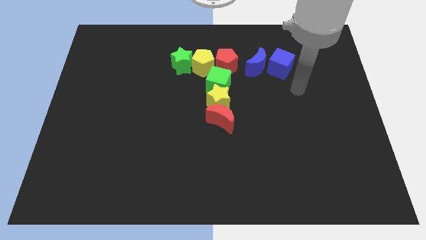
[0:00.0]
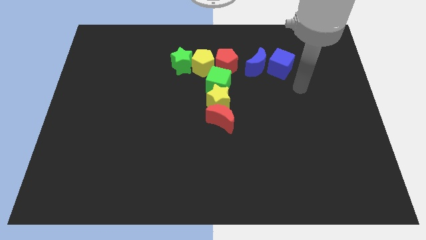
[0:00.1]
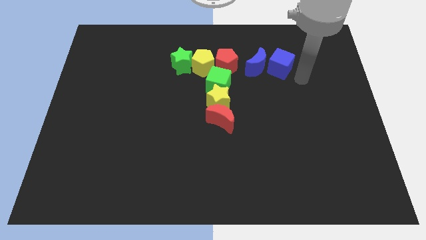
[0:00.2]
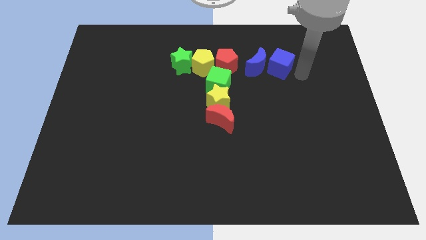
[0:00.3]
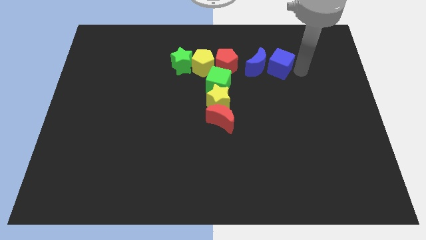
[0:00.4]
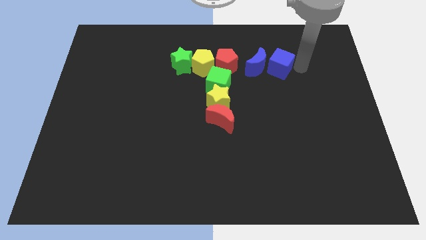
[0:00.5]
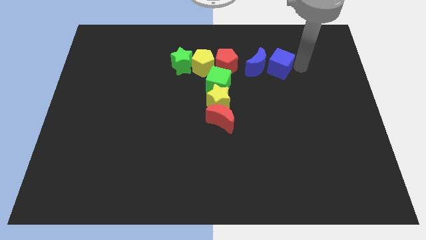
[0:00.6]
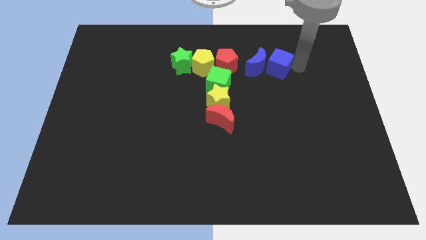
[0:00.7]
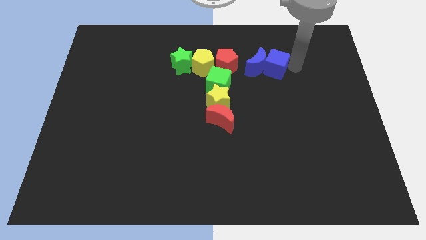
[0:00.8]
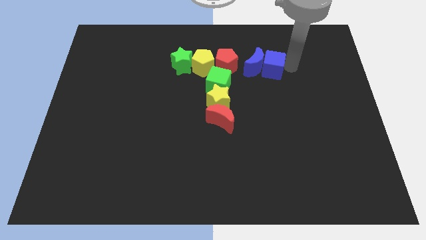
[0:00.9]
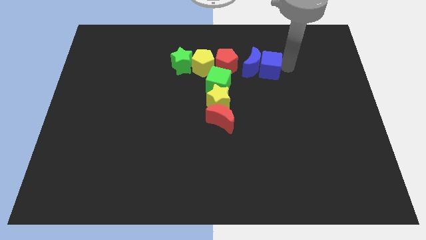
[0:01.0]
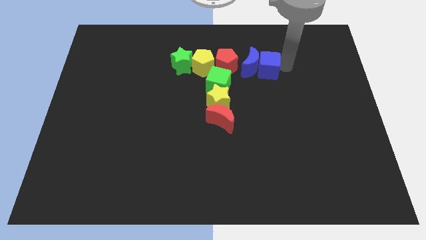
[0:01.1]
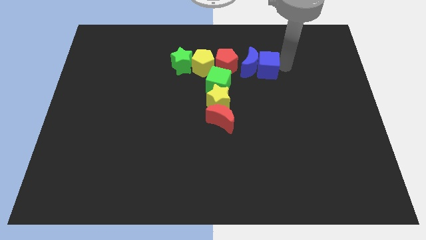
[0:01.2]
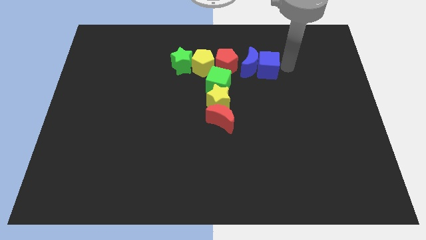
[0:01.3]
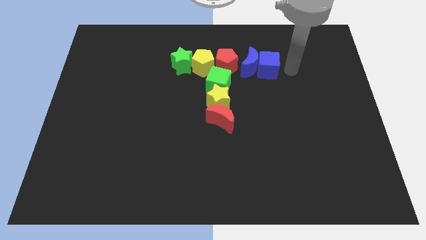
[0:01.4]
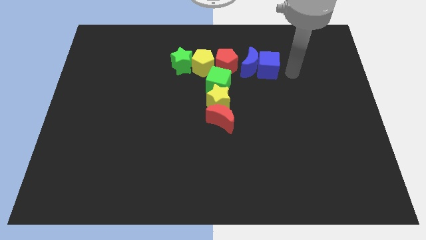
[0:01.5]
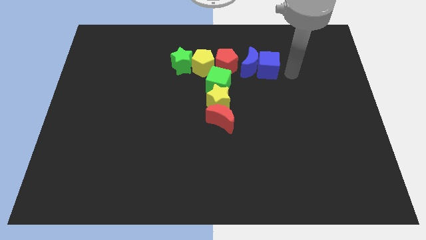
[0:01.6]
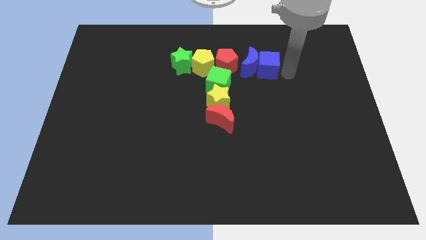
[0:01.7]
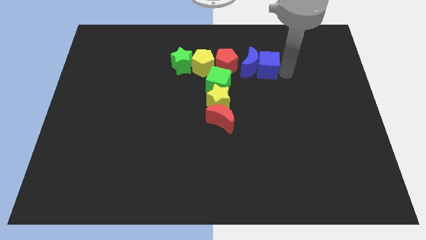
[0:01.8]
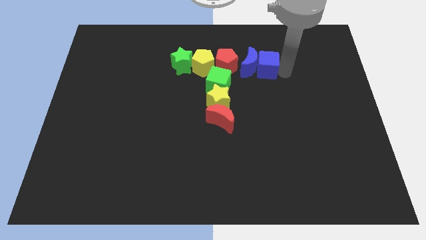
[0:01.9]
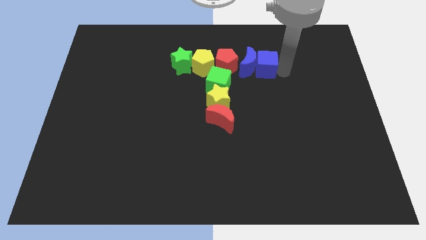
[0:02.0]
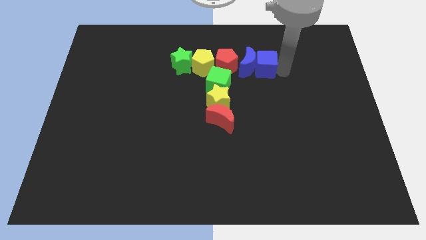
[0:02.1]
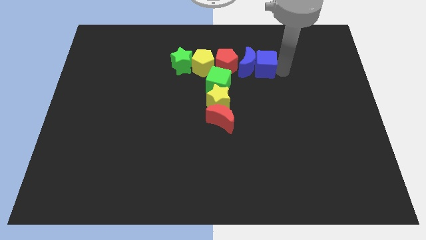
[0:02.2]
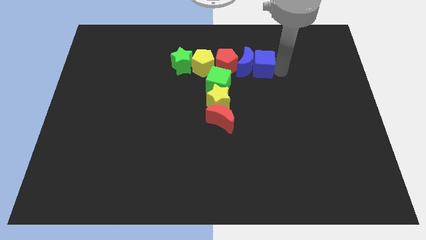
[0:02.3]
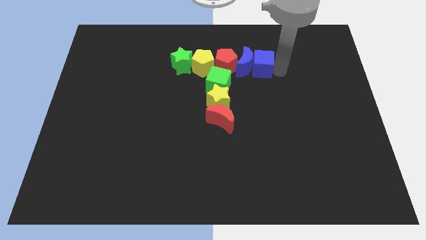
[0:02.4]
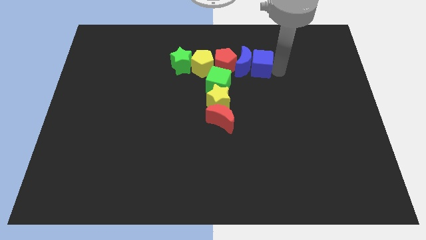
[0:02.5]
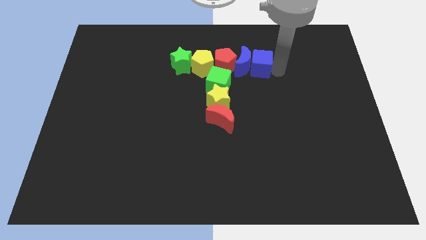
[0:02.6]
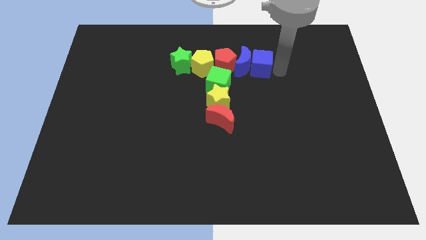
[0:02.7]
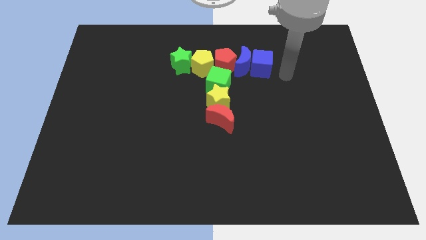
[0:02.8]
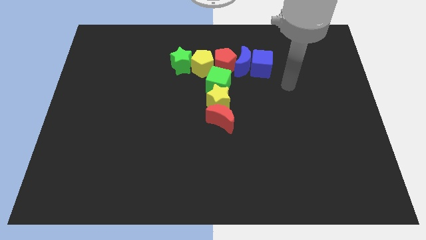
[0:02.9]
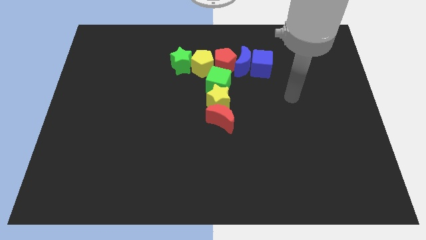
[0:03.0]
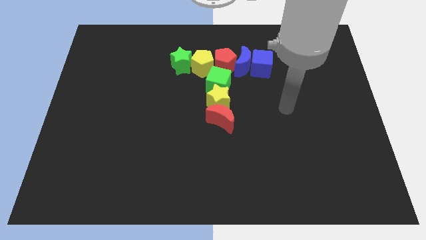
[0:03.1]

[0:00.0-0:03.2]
push blue blocks to the right of red pentagon

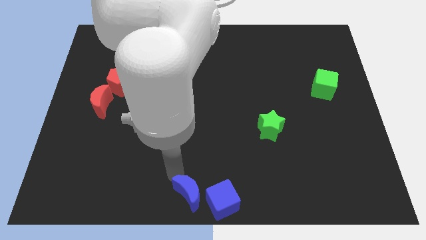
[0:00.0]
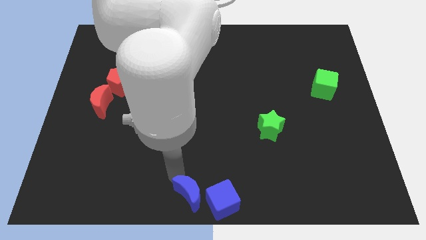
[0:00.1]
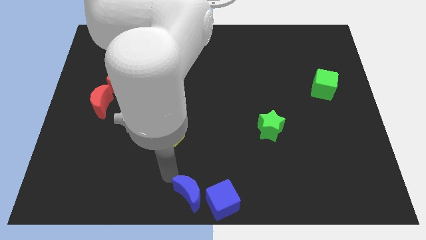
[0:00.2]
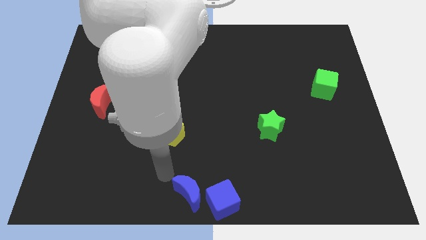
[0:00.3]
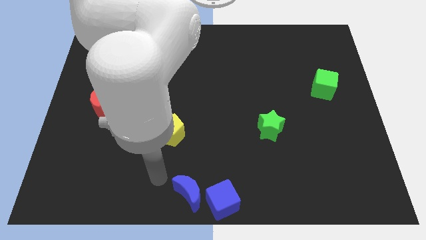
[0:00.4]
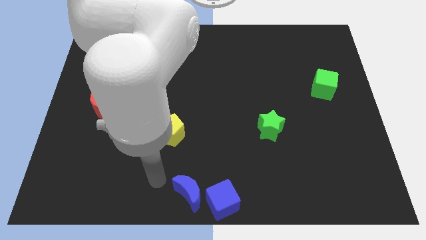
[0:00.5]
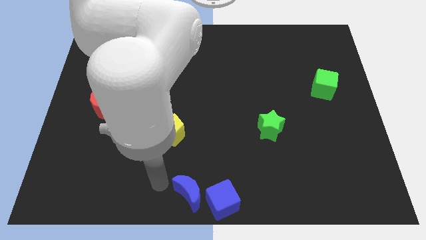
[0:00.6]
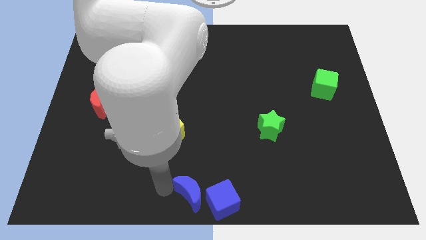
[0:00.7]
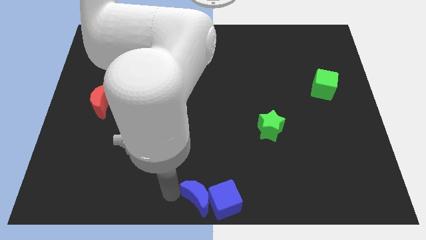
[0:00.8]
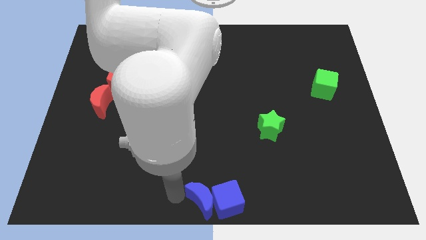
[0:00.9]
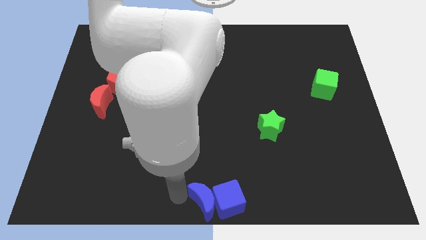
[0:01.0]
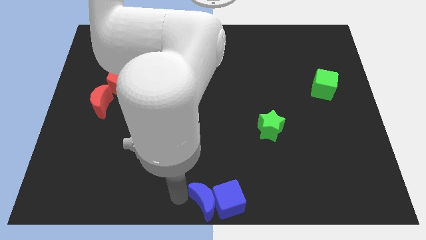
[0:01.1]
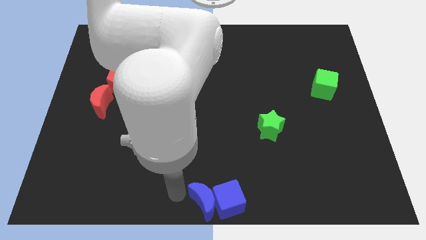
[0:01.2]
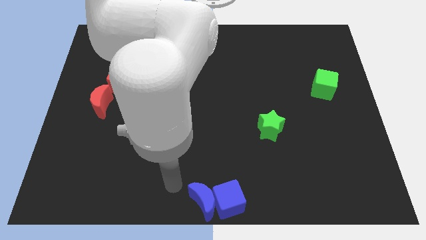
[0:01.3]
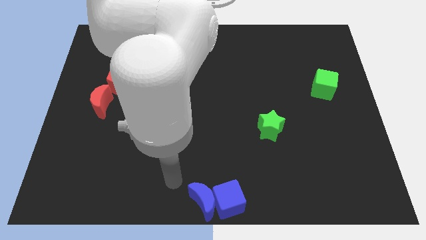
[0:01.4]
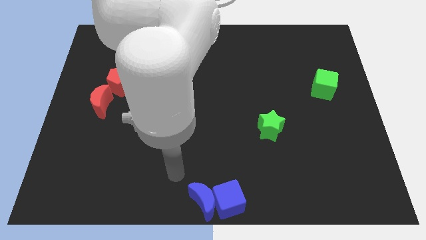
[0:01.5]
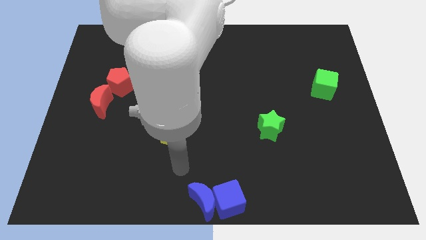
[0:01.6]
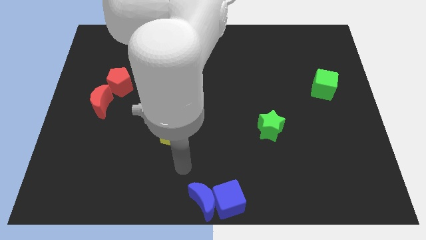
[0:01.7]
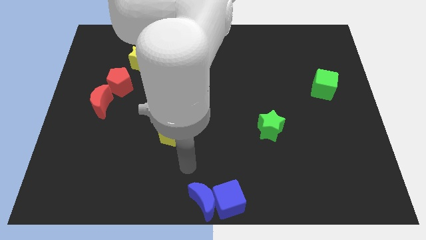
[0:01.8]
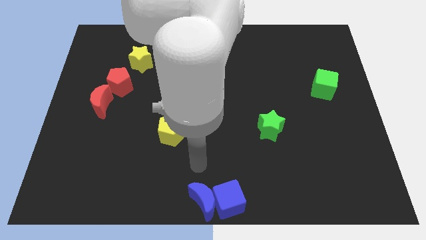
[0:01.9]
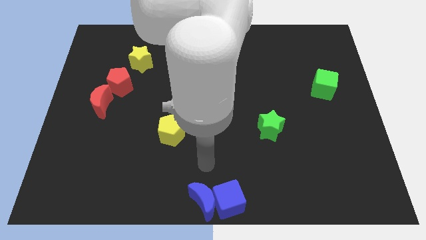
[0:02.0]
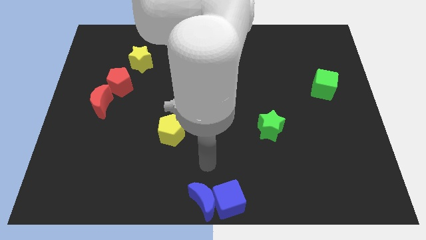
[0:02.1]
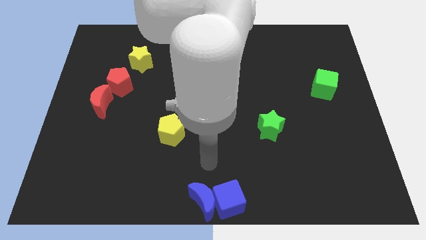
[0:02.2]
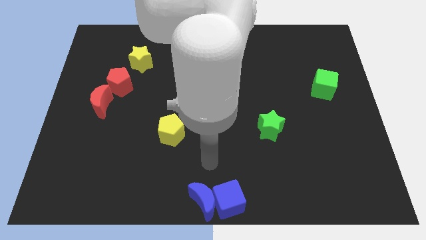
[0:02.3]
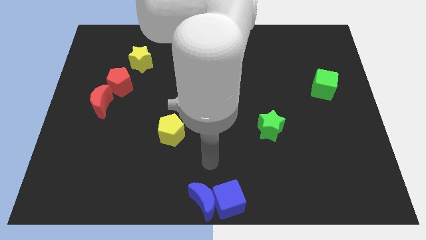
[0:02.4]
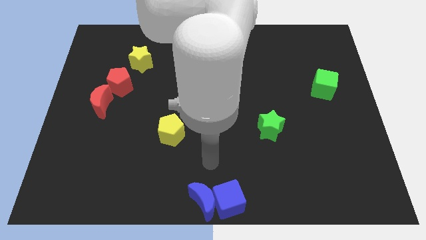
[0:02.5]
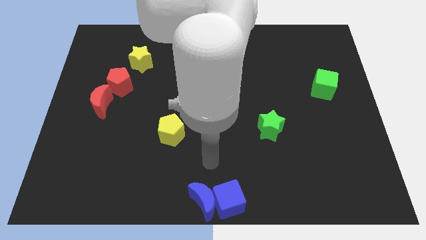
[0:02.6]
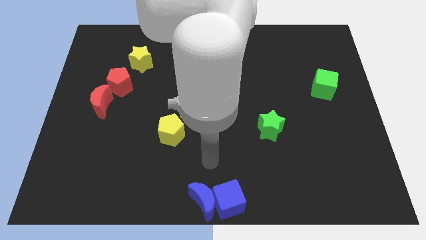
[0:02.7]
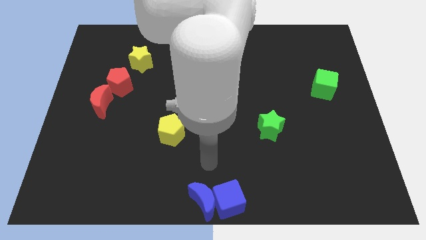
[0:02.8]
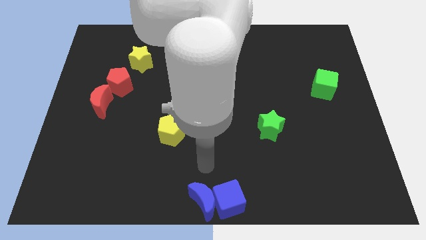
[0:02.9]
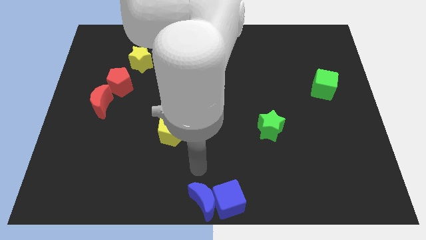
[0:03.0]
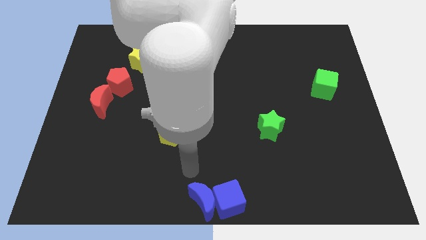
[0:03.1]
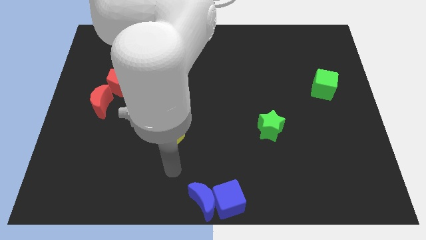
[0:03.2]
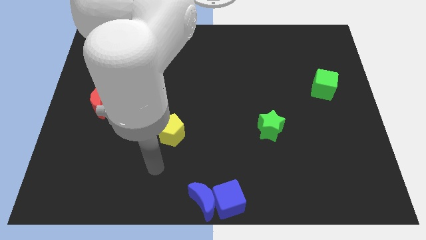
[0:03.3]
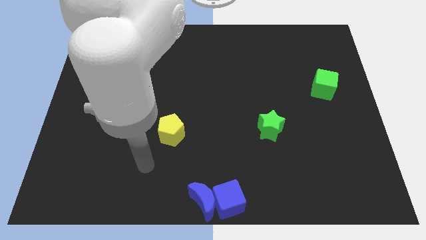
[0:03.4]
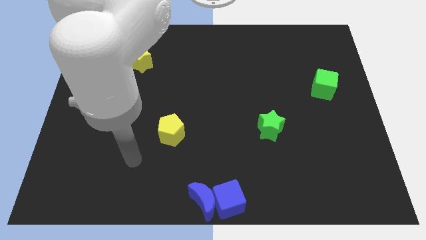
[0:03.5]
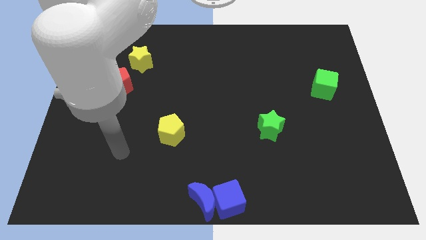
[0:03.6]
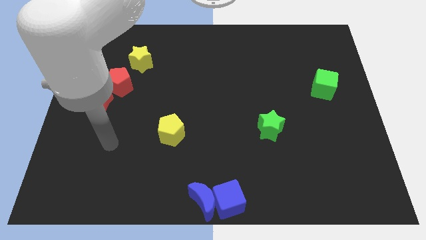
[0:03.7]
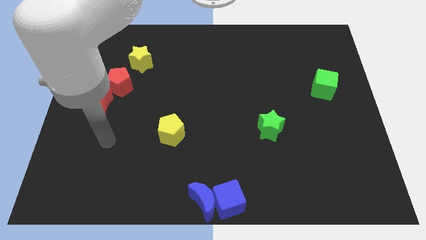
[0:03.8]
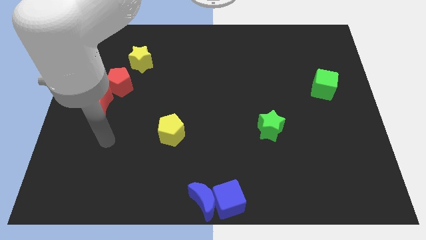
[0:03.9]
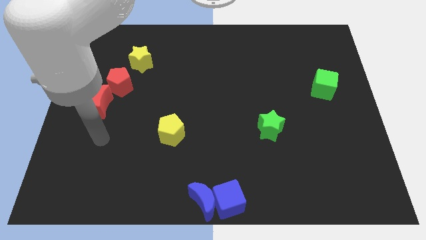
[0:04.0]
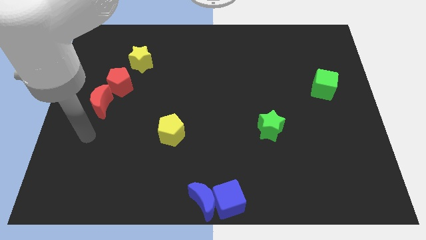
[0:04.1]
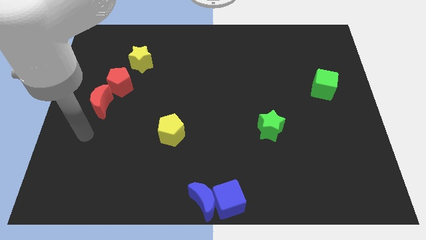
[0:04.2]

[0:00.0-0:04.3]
push the blue moon into the blue cube to the bottom center

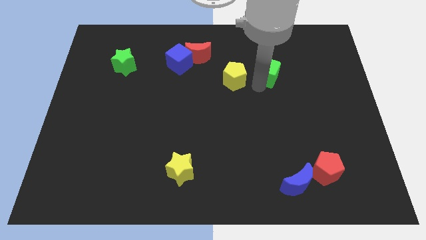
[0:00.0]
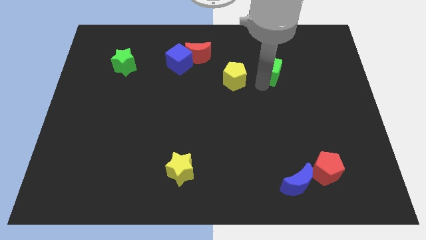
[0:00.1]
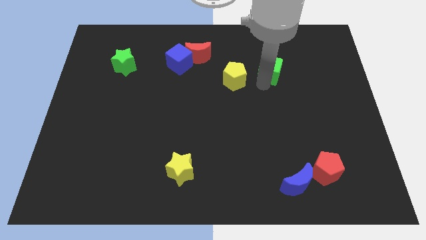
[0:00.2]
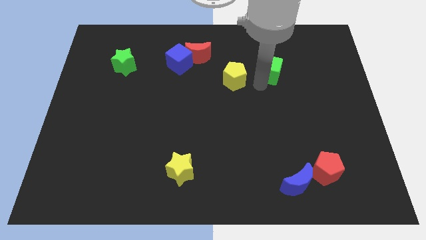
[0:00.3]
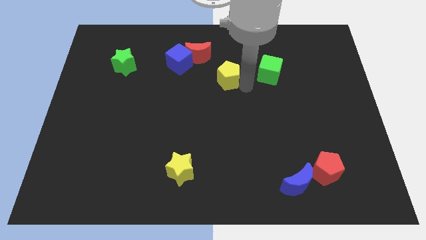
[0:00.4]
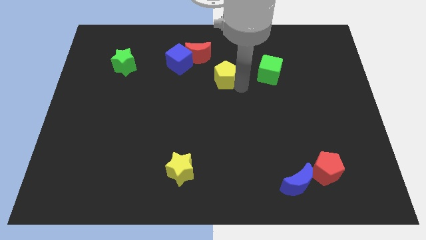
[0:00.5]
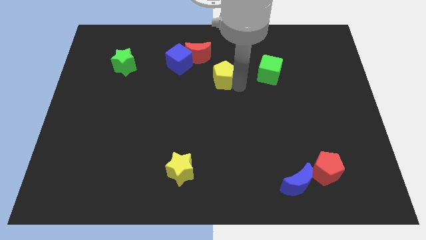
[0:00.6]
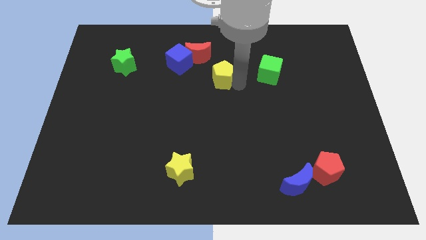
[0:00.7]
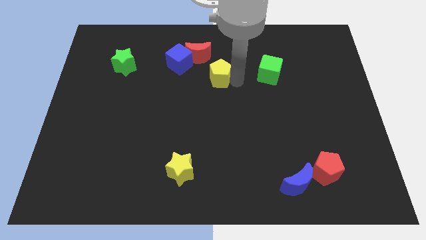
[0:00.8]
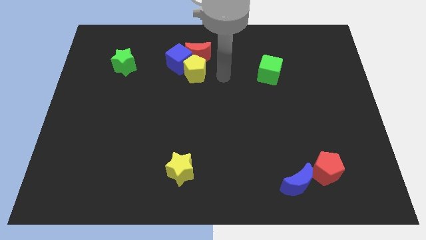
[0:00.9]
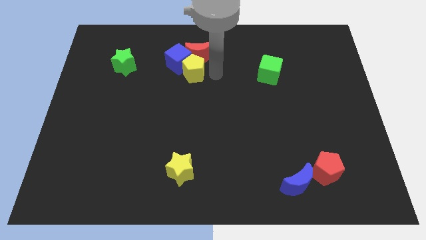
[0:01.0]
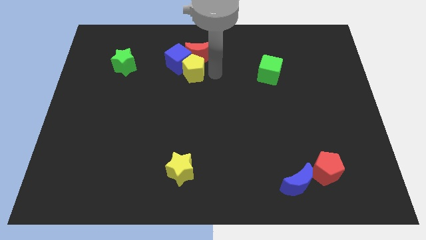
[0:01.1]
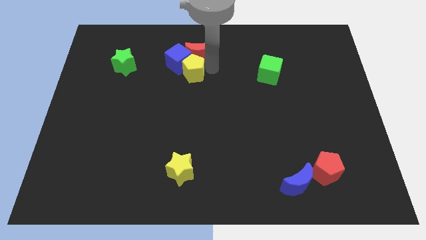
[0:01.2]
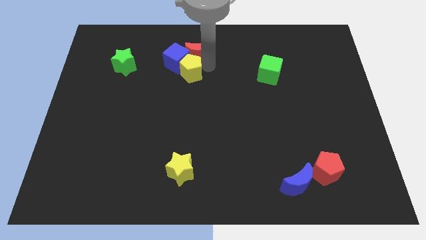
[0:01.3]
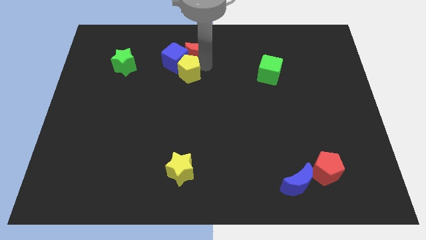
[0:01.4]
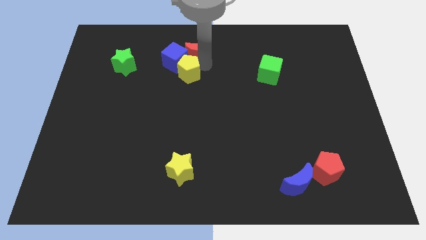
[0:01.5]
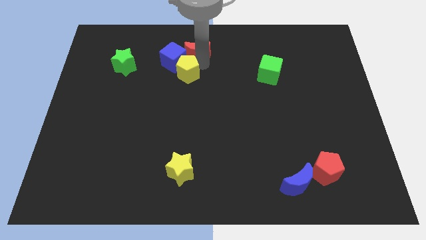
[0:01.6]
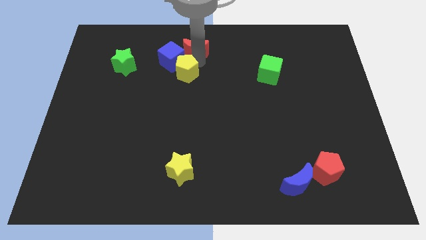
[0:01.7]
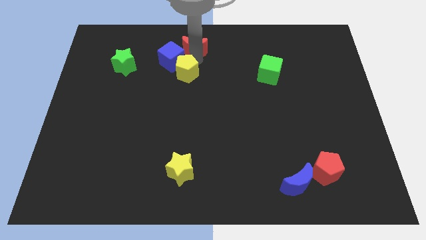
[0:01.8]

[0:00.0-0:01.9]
push the yellow pentagon into the blue cube
